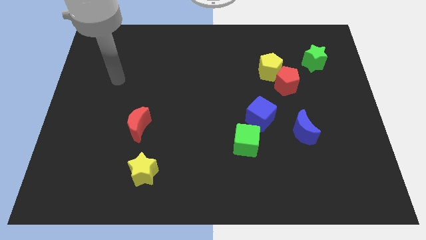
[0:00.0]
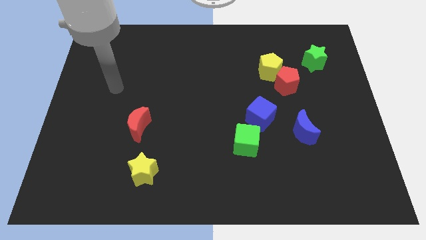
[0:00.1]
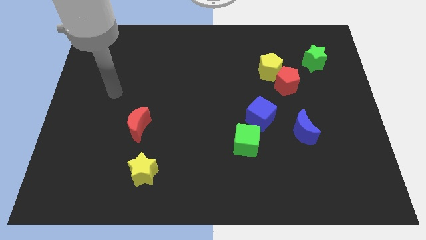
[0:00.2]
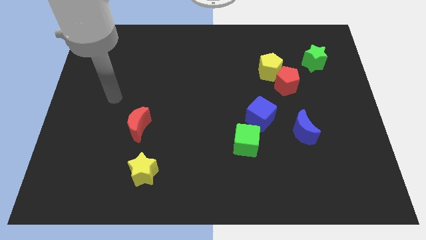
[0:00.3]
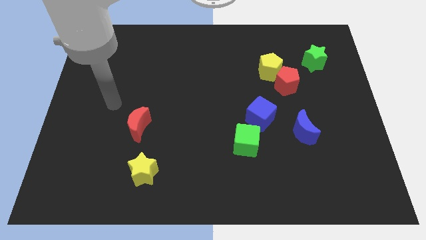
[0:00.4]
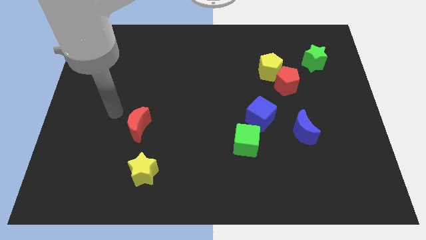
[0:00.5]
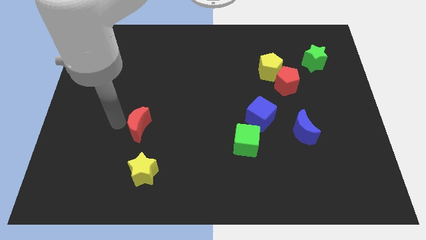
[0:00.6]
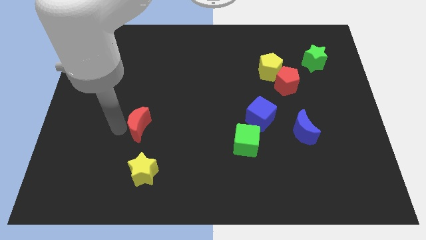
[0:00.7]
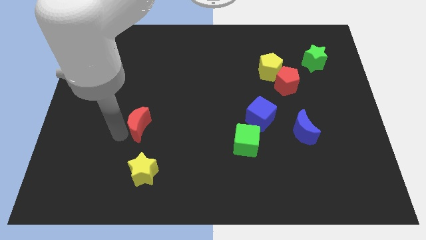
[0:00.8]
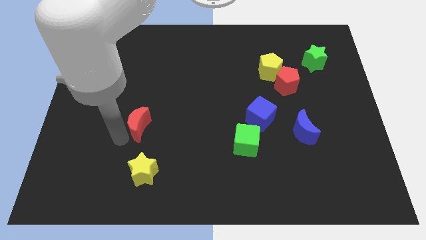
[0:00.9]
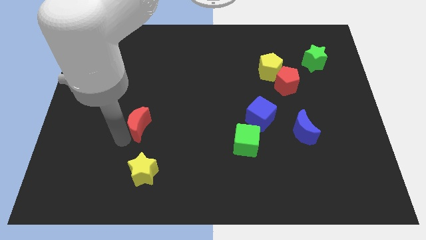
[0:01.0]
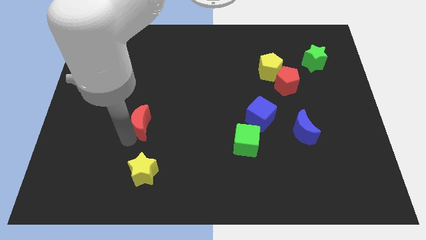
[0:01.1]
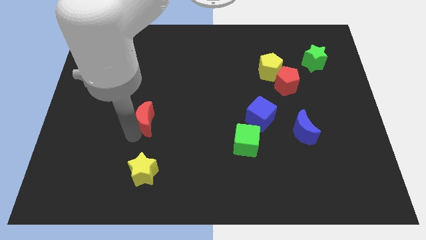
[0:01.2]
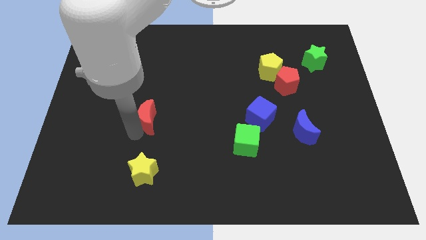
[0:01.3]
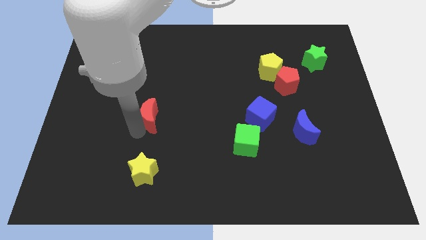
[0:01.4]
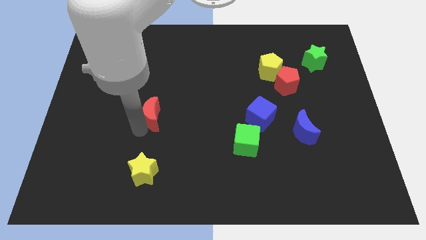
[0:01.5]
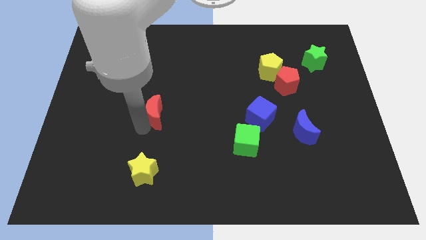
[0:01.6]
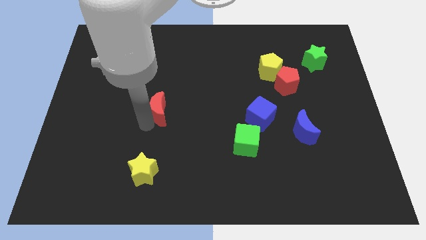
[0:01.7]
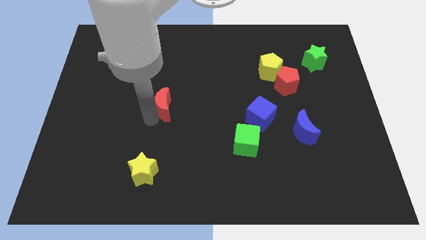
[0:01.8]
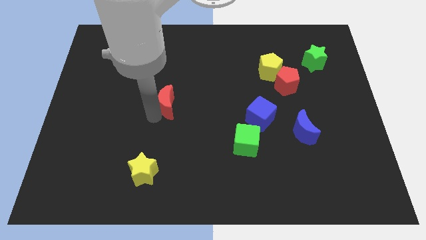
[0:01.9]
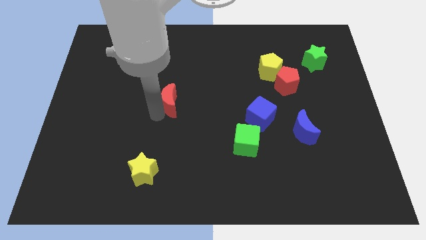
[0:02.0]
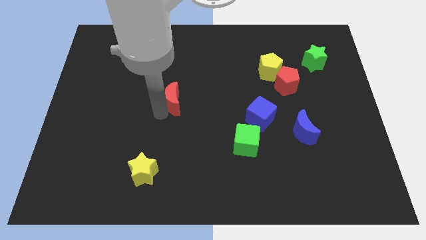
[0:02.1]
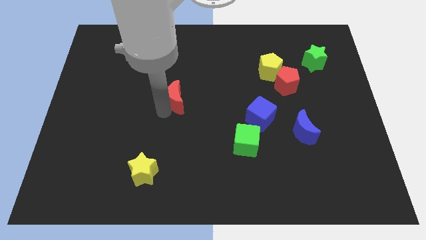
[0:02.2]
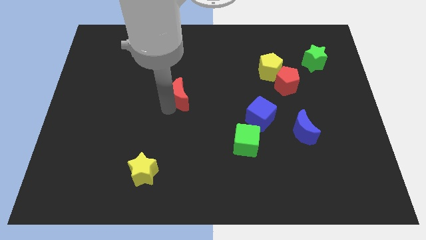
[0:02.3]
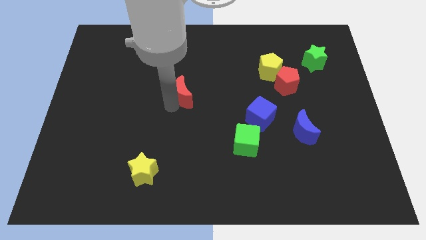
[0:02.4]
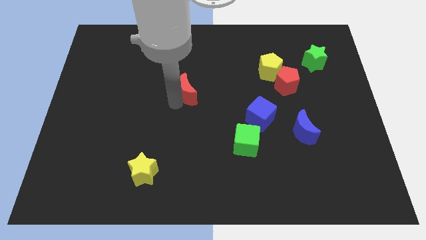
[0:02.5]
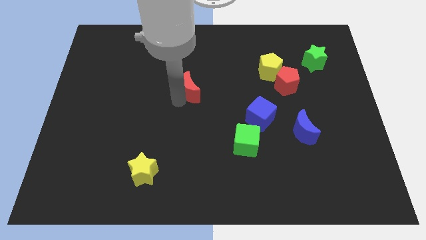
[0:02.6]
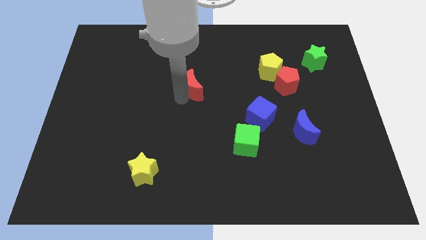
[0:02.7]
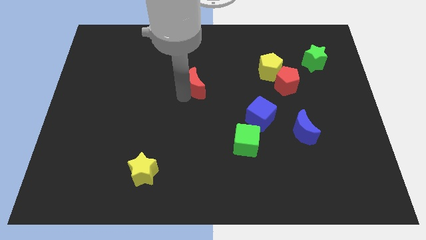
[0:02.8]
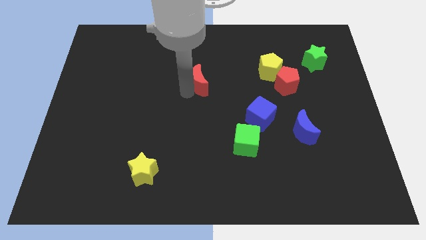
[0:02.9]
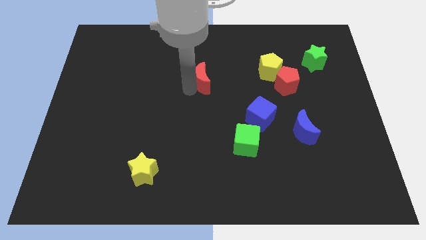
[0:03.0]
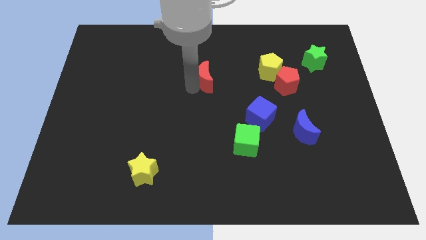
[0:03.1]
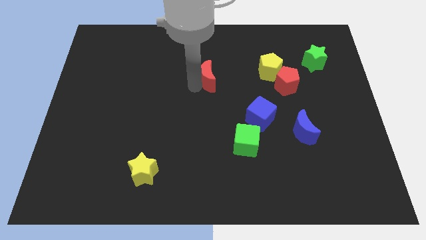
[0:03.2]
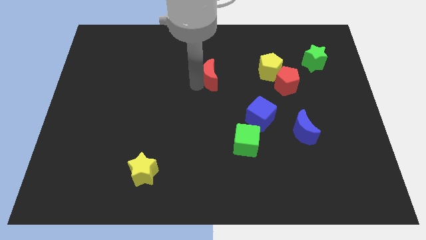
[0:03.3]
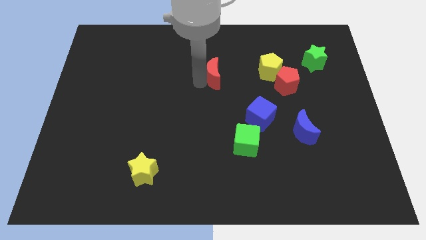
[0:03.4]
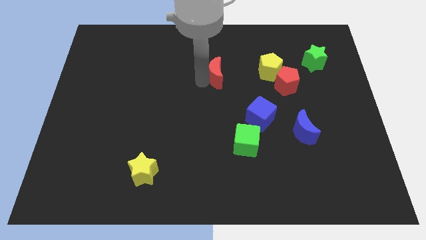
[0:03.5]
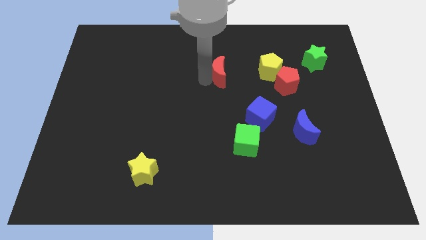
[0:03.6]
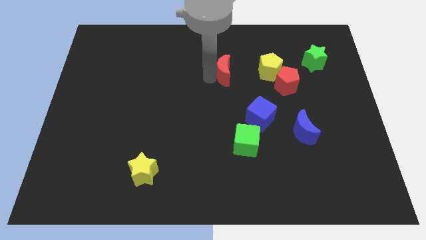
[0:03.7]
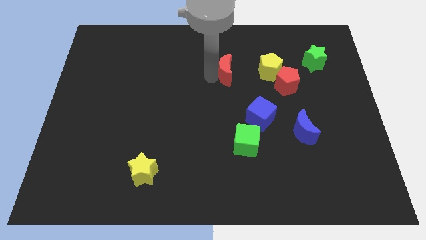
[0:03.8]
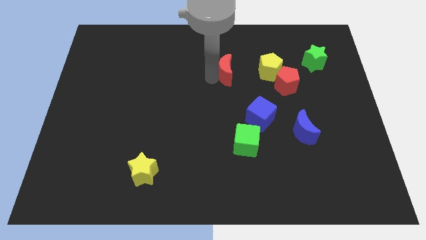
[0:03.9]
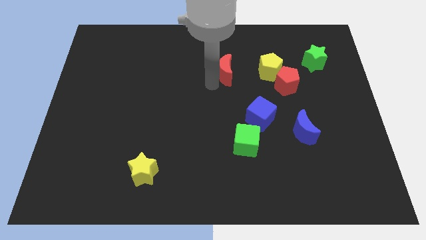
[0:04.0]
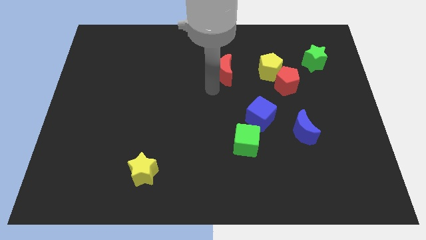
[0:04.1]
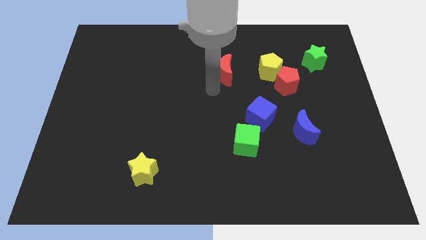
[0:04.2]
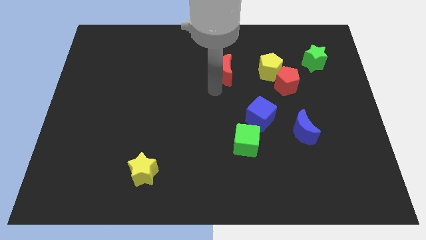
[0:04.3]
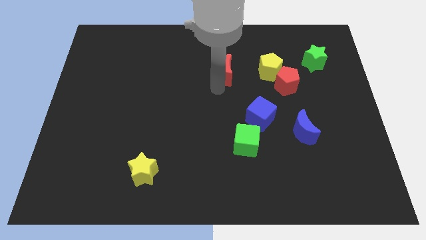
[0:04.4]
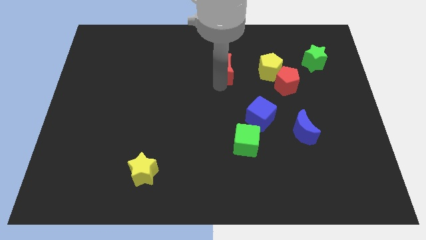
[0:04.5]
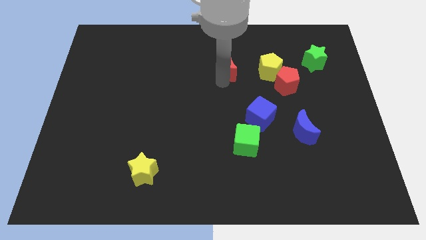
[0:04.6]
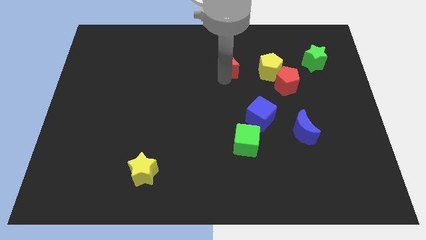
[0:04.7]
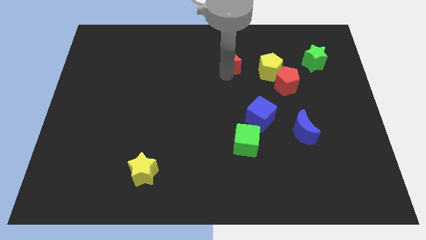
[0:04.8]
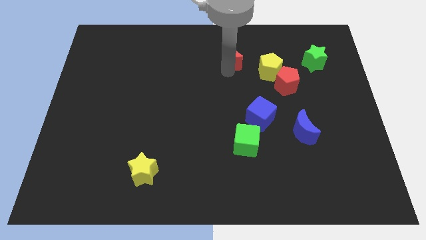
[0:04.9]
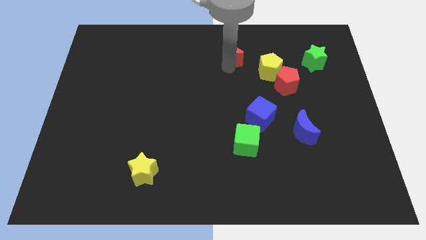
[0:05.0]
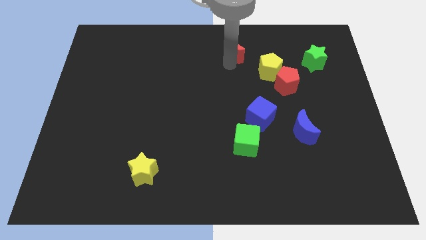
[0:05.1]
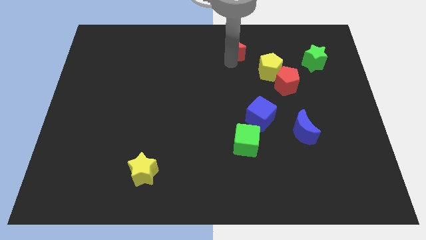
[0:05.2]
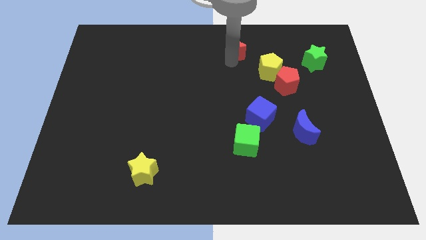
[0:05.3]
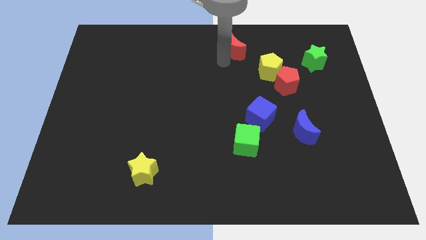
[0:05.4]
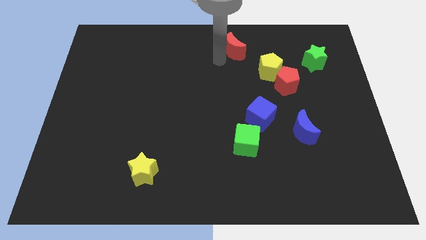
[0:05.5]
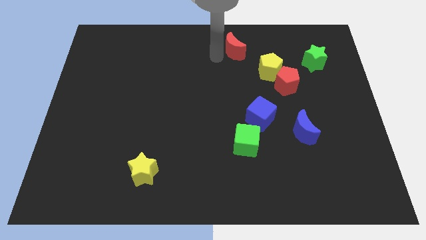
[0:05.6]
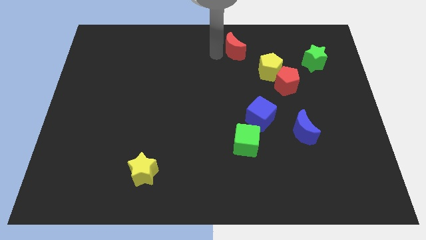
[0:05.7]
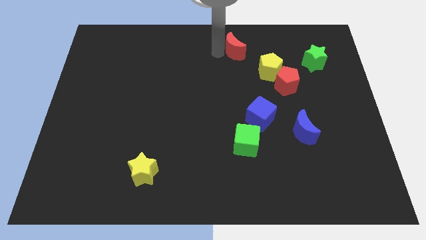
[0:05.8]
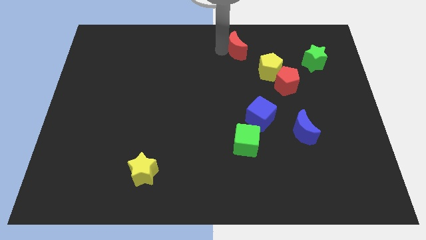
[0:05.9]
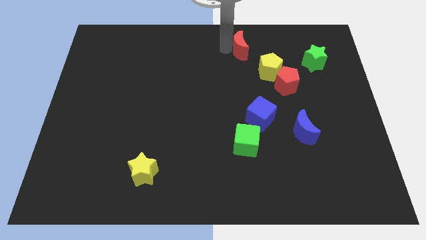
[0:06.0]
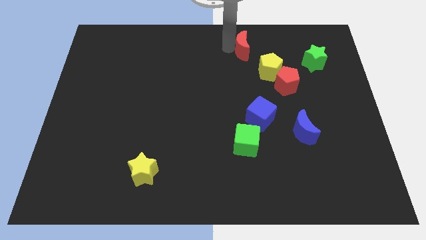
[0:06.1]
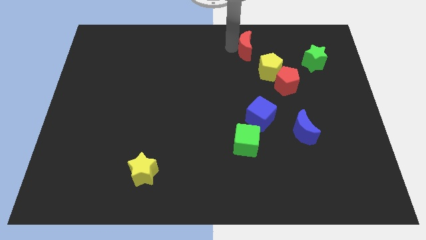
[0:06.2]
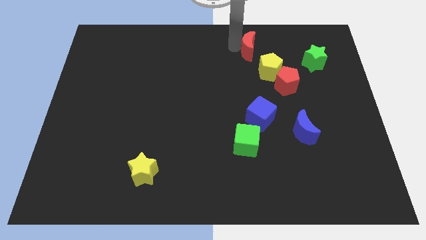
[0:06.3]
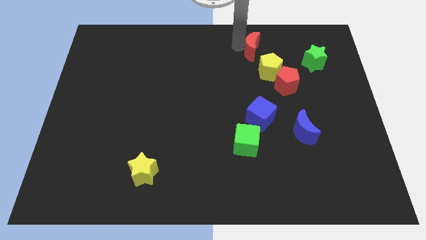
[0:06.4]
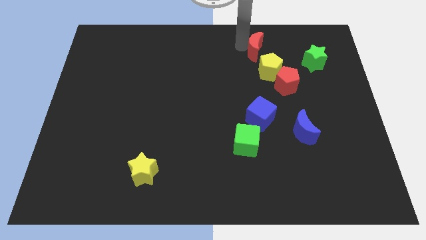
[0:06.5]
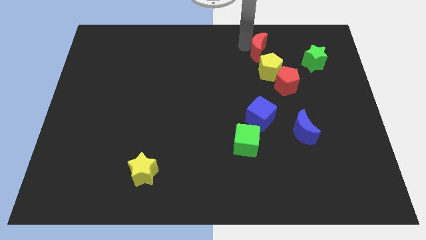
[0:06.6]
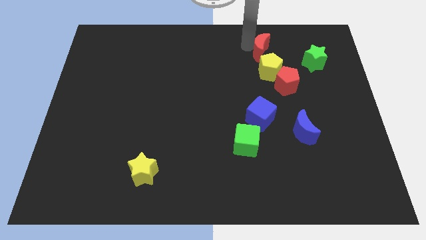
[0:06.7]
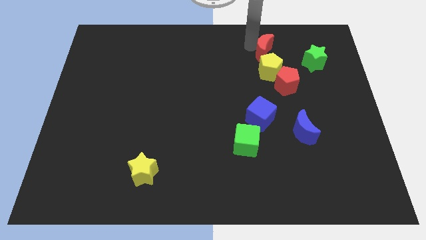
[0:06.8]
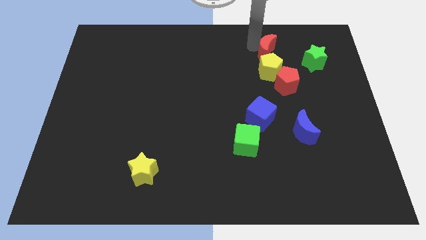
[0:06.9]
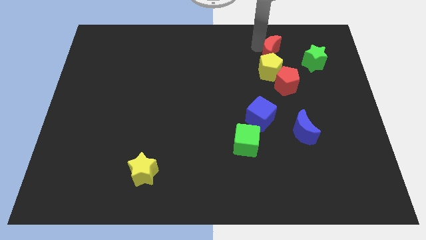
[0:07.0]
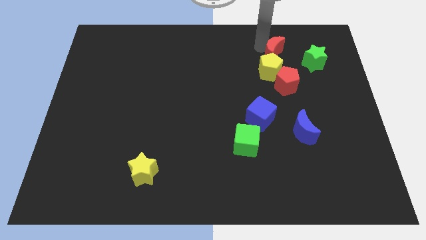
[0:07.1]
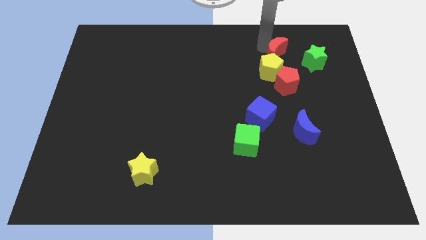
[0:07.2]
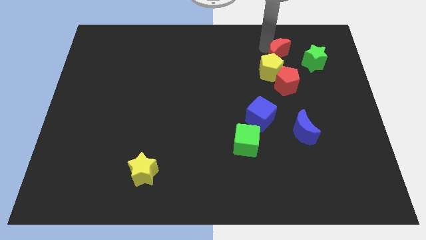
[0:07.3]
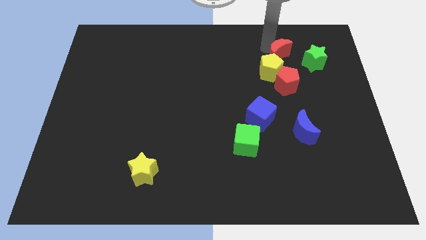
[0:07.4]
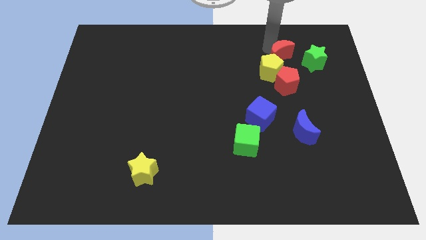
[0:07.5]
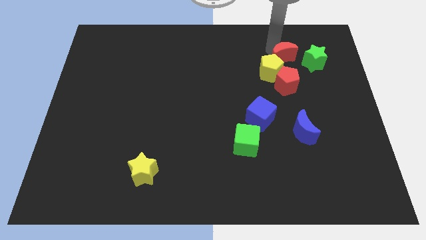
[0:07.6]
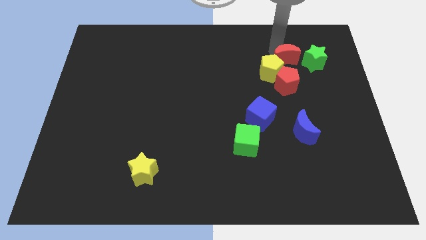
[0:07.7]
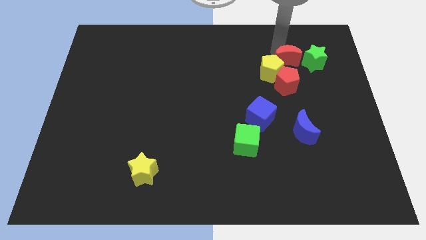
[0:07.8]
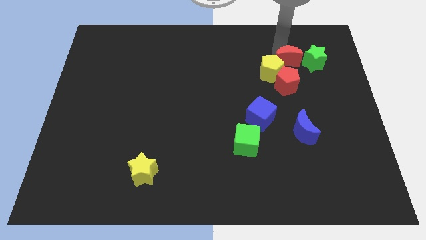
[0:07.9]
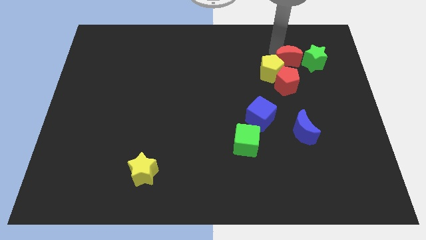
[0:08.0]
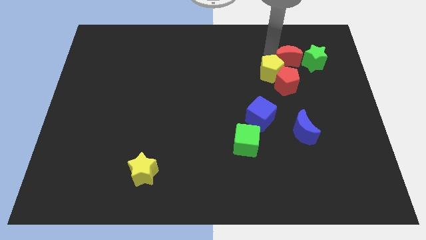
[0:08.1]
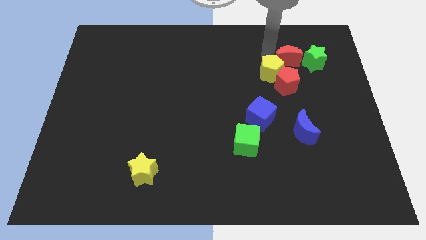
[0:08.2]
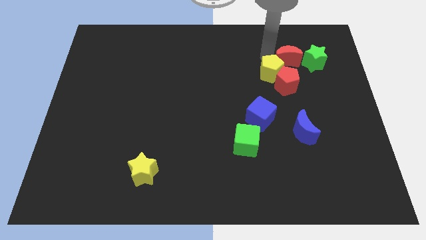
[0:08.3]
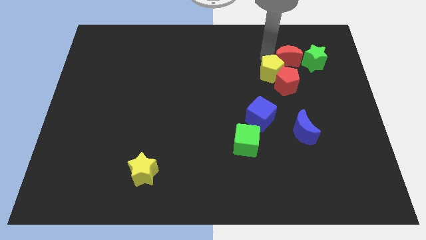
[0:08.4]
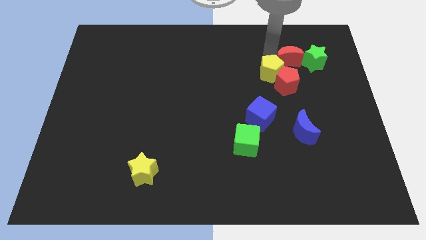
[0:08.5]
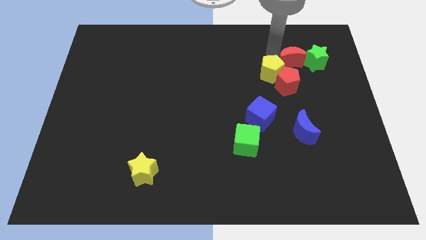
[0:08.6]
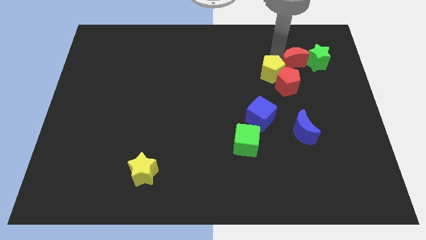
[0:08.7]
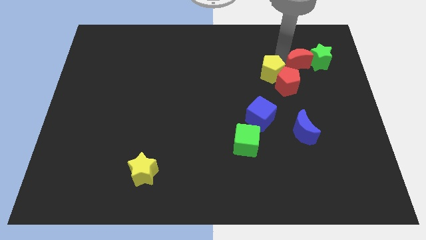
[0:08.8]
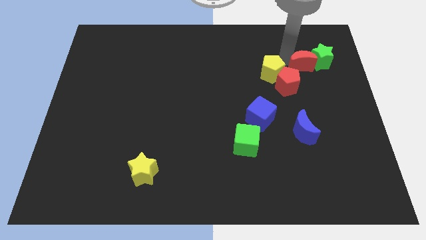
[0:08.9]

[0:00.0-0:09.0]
put the red moon next to the green star
